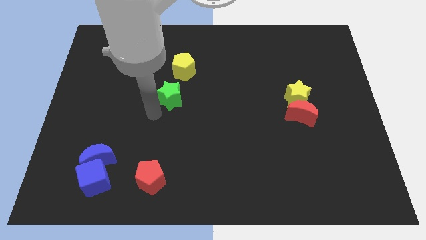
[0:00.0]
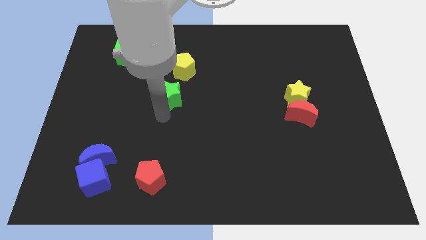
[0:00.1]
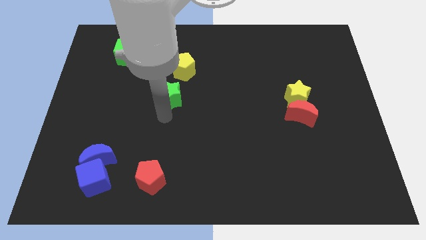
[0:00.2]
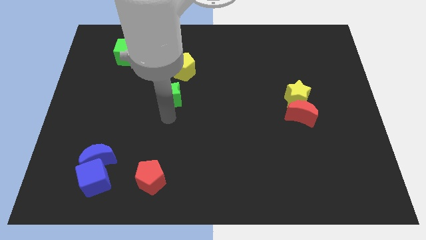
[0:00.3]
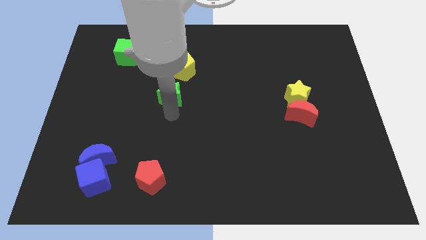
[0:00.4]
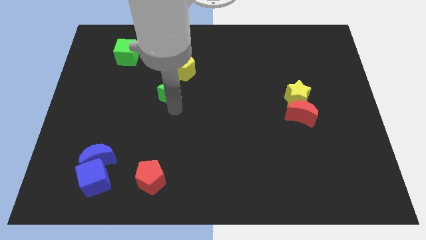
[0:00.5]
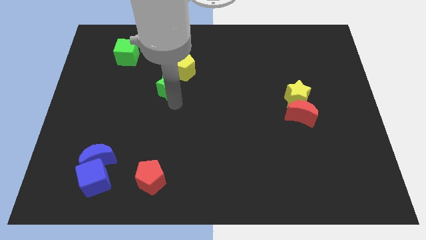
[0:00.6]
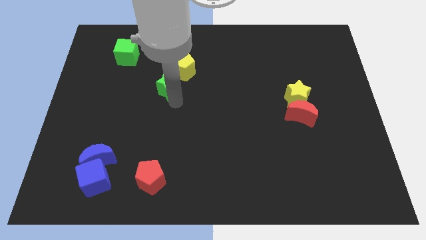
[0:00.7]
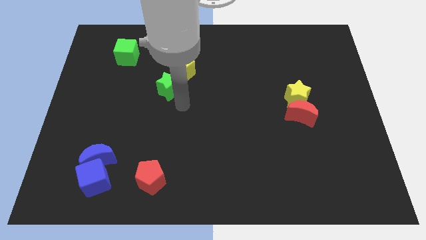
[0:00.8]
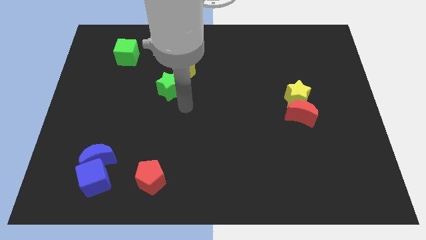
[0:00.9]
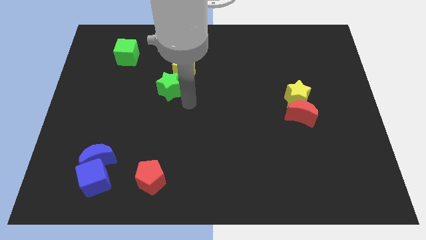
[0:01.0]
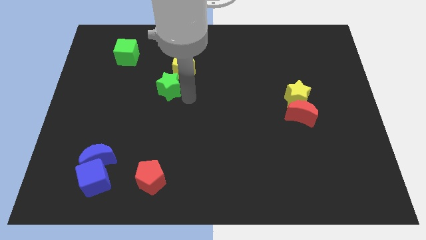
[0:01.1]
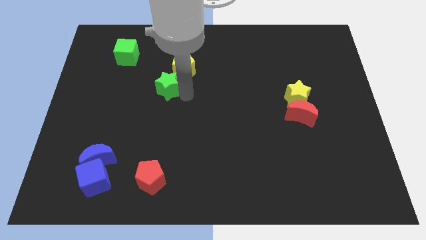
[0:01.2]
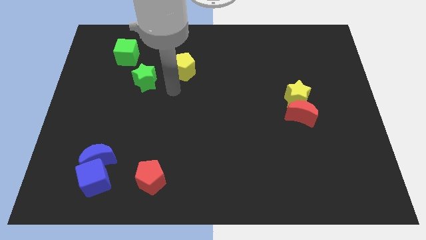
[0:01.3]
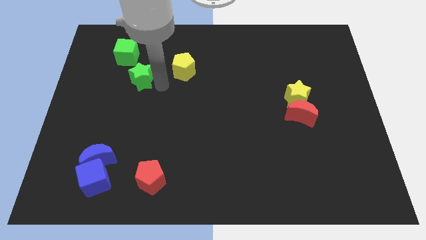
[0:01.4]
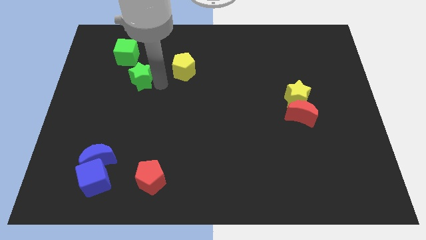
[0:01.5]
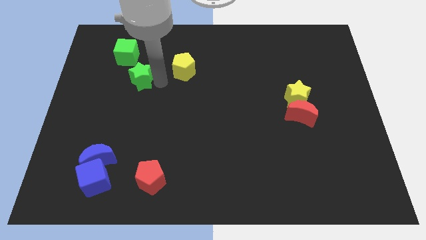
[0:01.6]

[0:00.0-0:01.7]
move the green star diagonally bottom left to the yellow pentagon

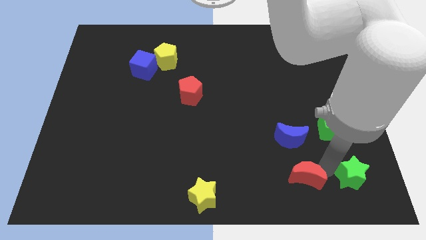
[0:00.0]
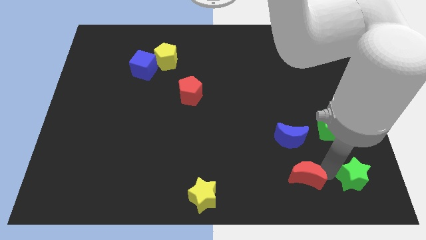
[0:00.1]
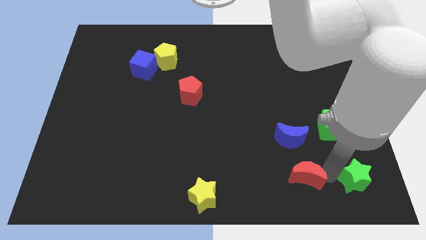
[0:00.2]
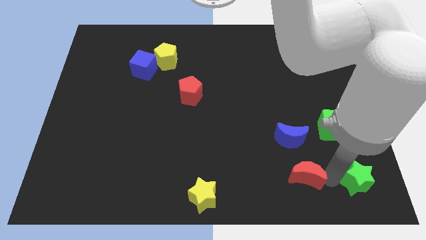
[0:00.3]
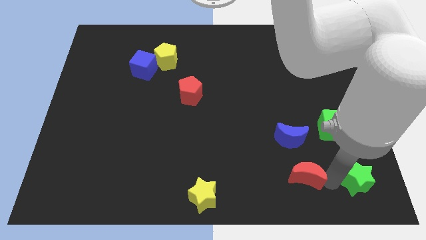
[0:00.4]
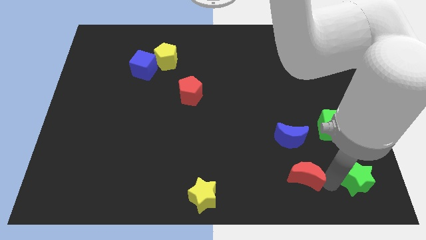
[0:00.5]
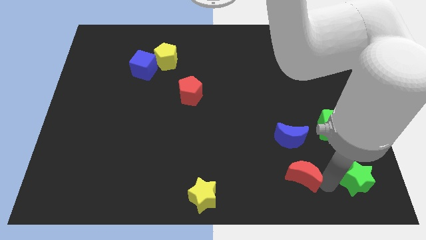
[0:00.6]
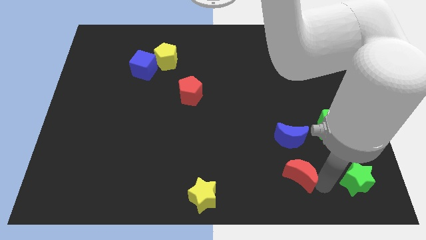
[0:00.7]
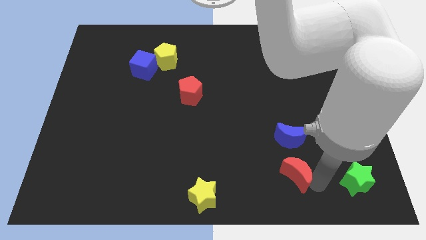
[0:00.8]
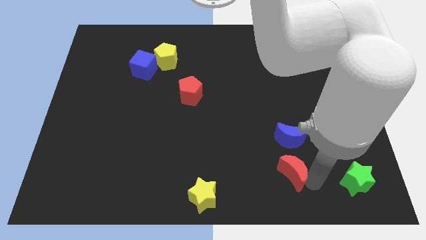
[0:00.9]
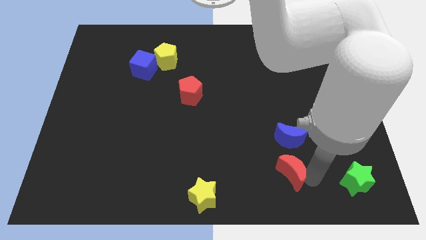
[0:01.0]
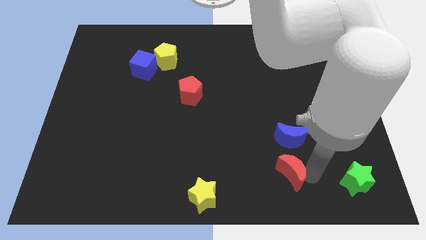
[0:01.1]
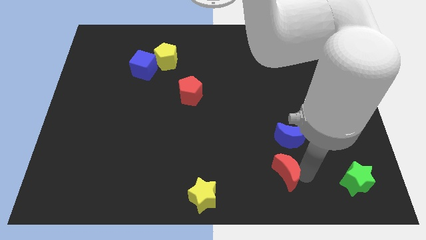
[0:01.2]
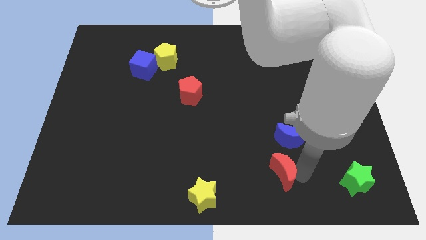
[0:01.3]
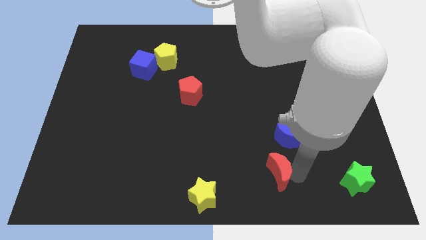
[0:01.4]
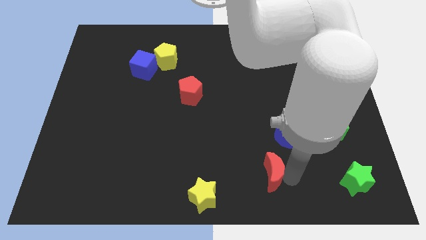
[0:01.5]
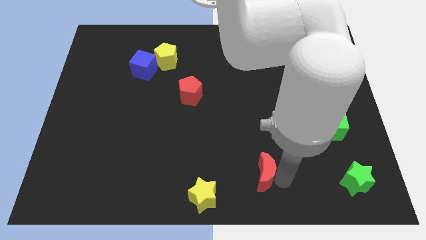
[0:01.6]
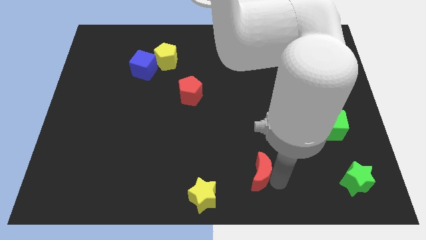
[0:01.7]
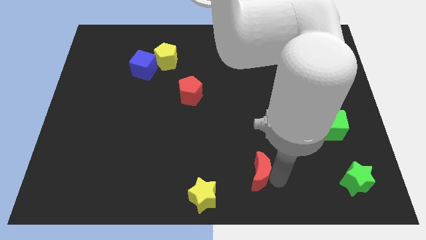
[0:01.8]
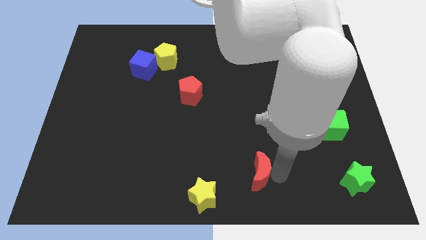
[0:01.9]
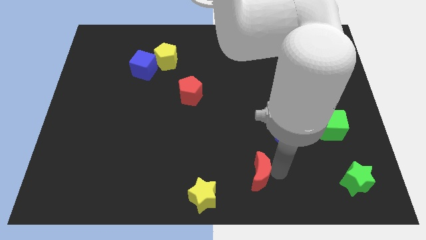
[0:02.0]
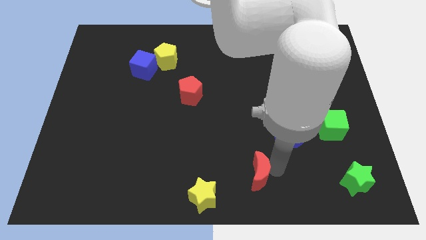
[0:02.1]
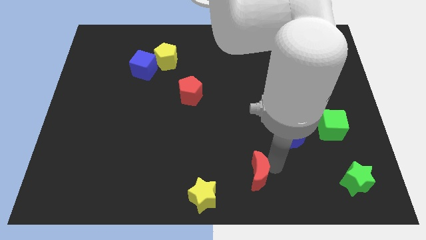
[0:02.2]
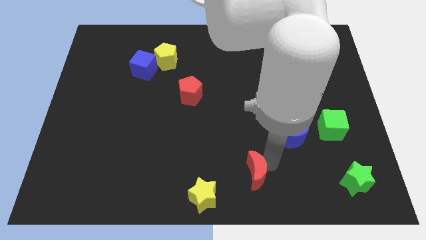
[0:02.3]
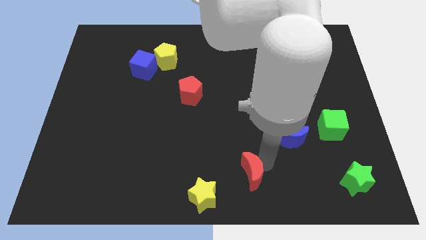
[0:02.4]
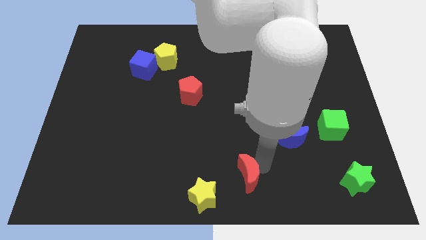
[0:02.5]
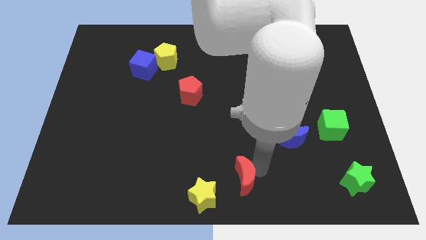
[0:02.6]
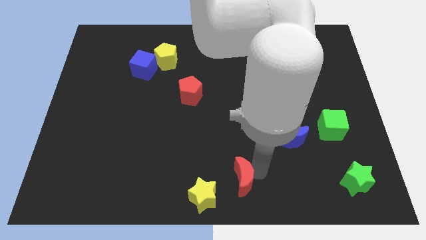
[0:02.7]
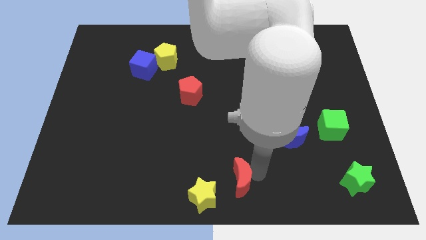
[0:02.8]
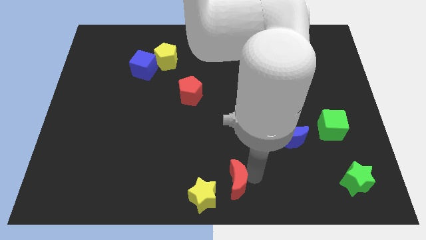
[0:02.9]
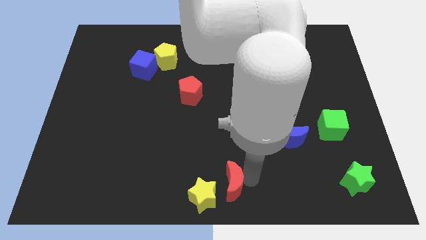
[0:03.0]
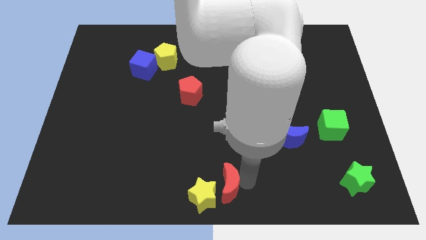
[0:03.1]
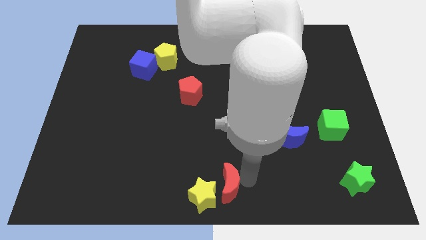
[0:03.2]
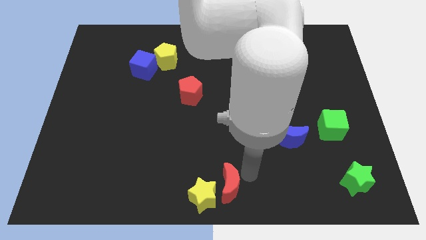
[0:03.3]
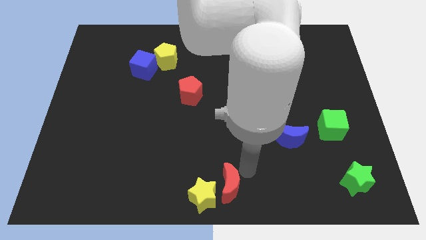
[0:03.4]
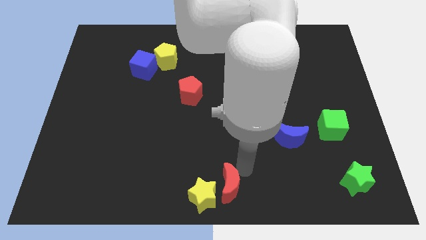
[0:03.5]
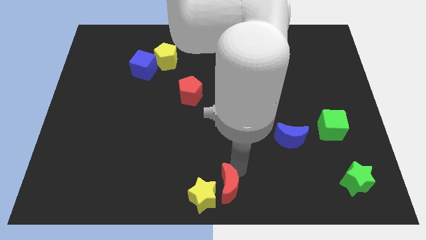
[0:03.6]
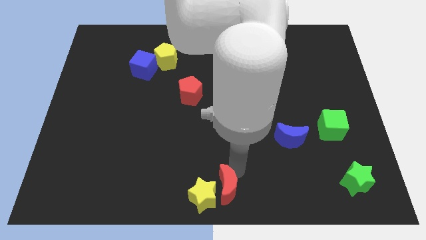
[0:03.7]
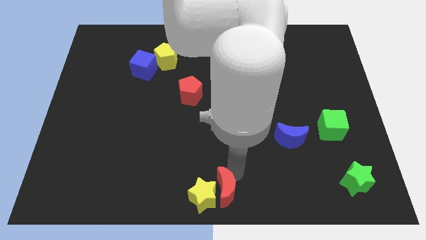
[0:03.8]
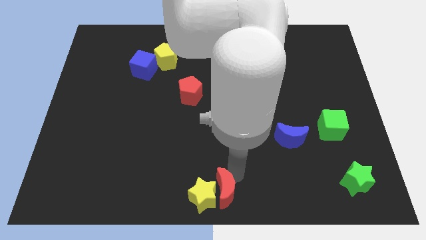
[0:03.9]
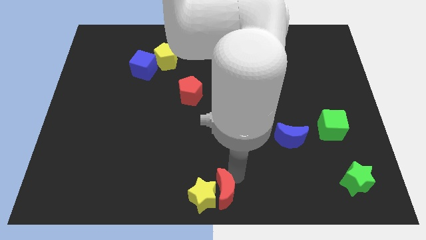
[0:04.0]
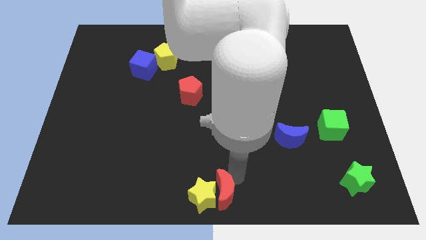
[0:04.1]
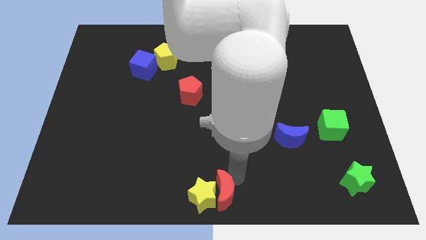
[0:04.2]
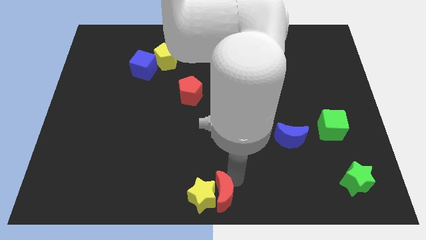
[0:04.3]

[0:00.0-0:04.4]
move the red moon to the right side of the yellow star

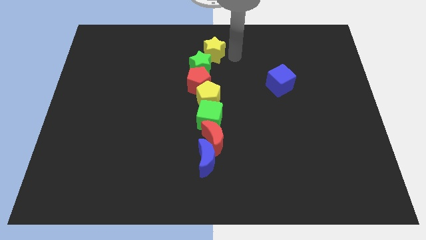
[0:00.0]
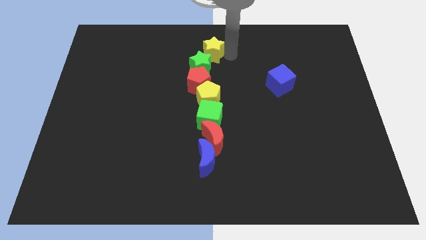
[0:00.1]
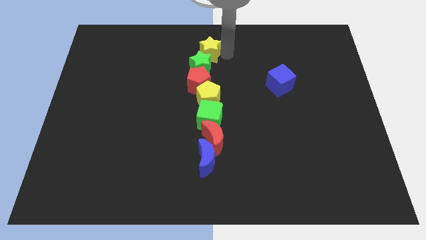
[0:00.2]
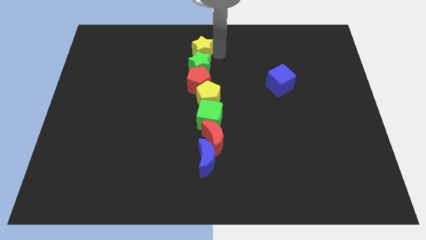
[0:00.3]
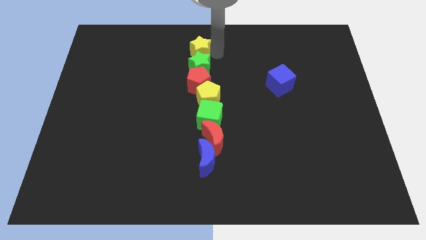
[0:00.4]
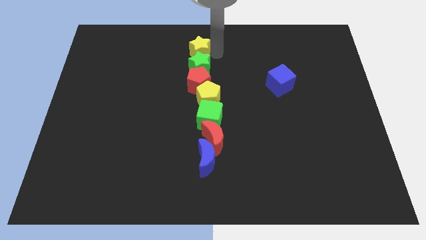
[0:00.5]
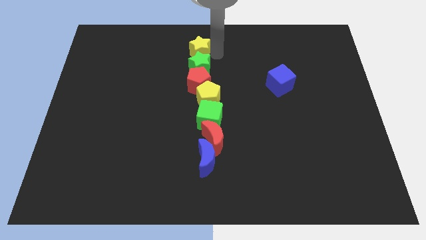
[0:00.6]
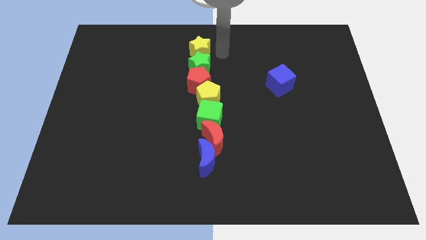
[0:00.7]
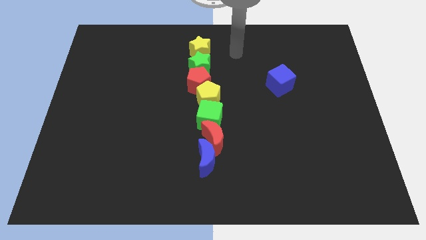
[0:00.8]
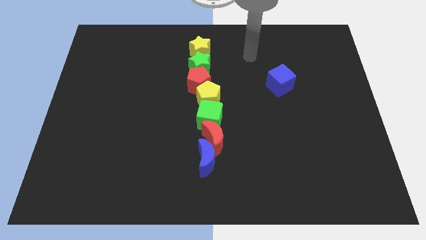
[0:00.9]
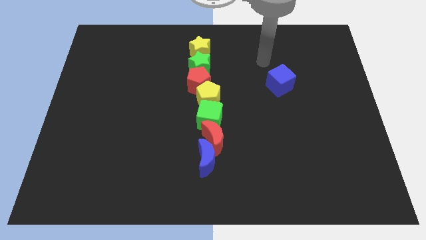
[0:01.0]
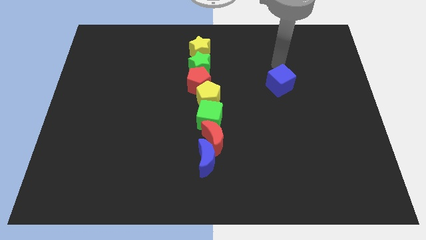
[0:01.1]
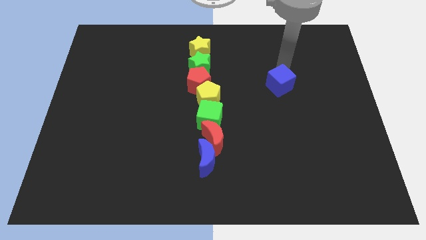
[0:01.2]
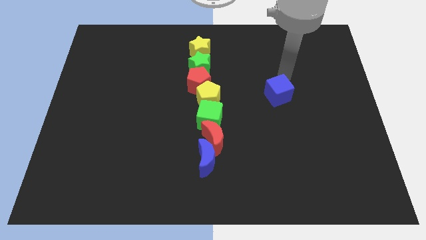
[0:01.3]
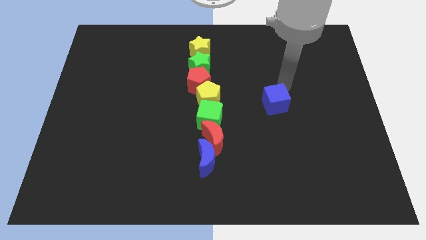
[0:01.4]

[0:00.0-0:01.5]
put the blue cube to the right of the yellow pentagon

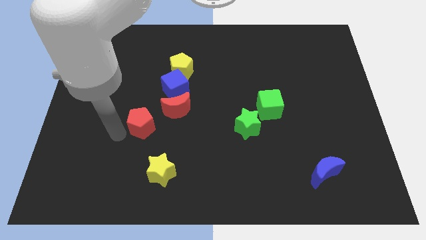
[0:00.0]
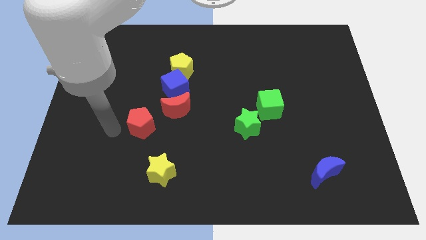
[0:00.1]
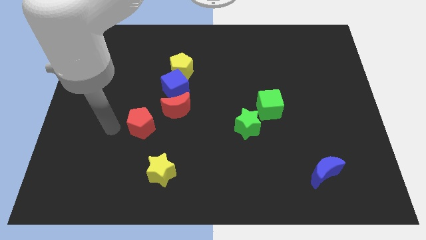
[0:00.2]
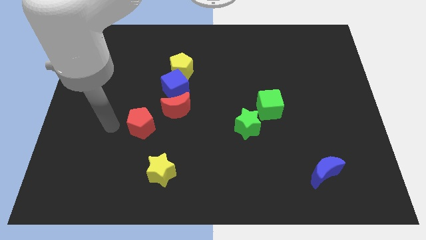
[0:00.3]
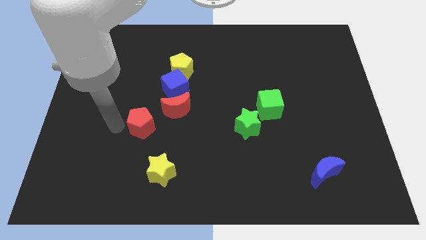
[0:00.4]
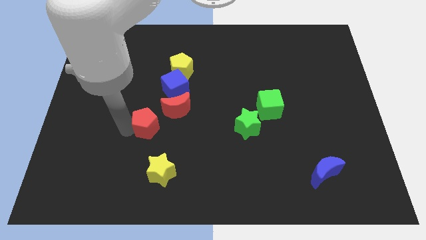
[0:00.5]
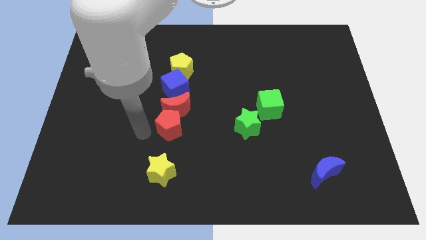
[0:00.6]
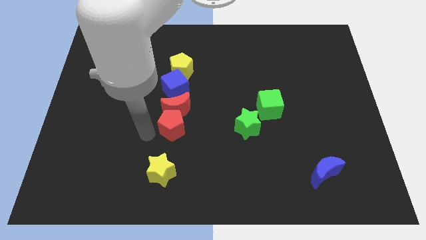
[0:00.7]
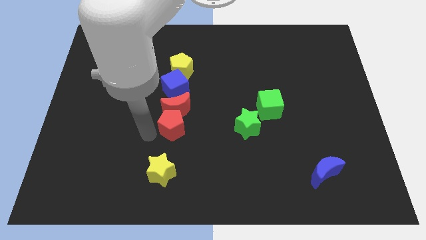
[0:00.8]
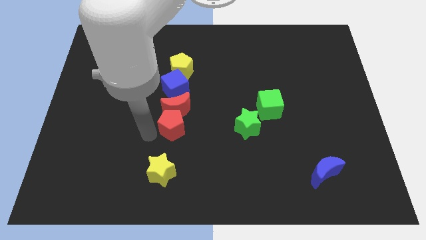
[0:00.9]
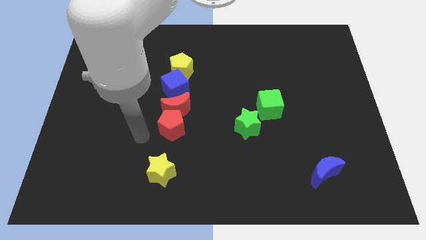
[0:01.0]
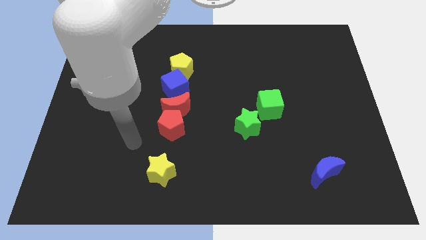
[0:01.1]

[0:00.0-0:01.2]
place the red pentagon below the red crescent
